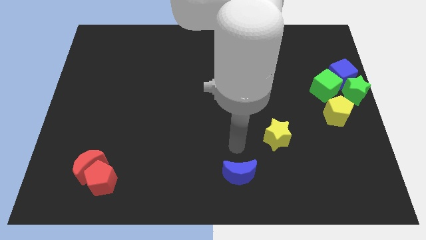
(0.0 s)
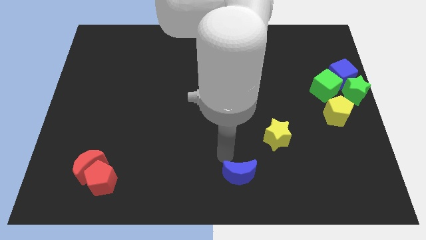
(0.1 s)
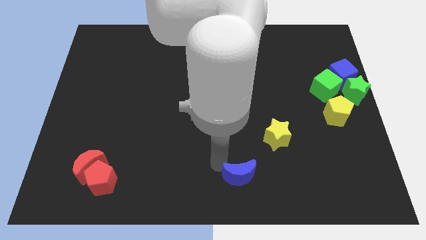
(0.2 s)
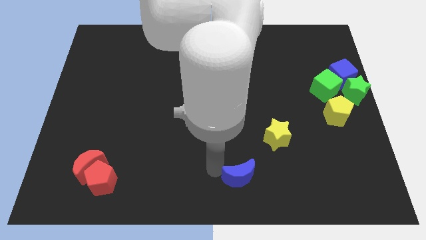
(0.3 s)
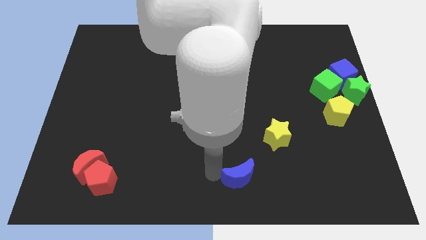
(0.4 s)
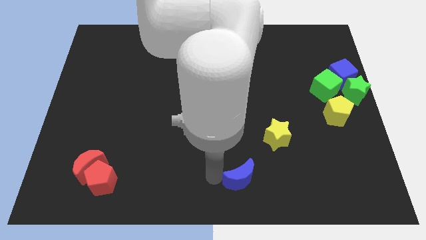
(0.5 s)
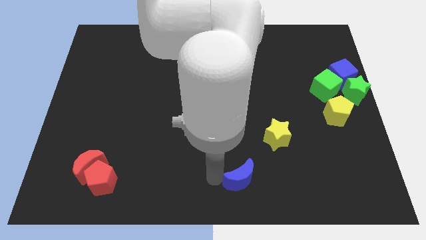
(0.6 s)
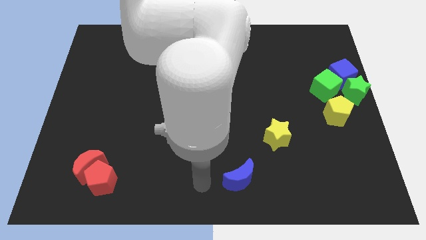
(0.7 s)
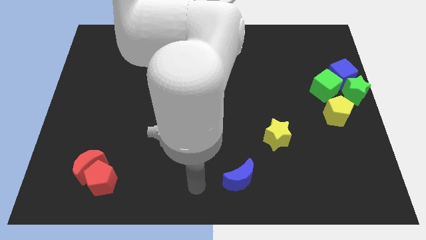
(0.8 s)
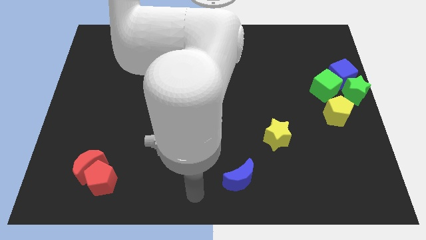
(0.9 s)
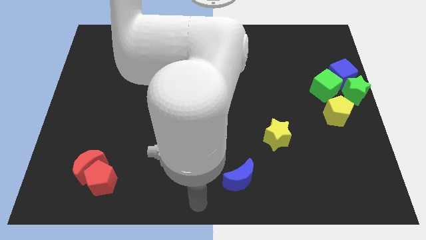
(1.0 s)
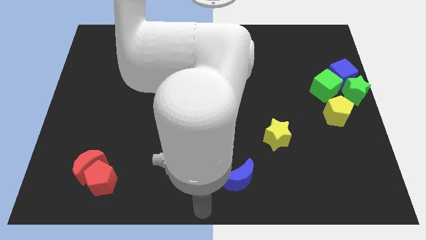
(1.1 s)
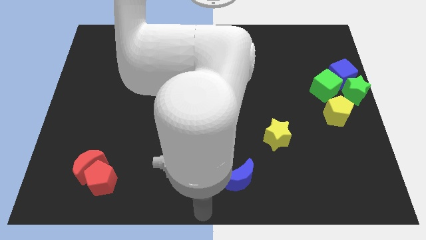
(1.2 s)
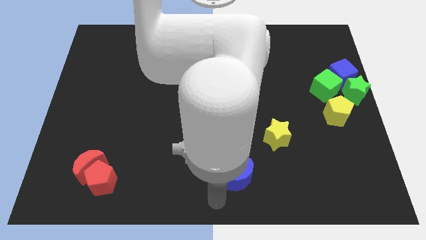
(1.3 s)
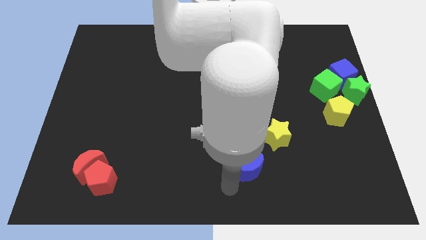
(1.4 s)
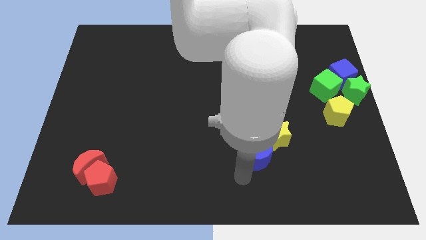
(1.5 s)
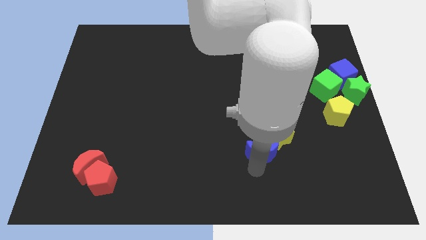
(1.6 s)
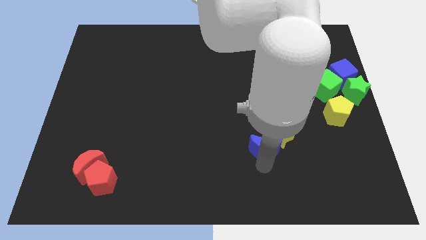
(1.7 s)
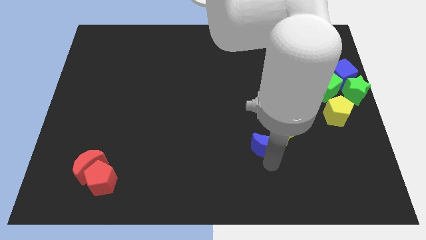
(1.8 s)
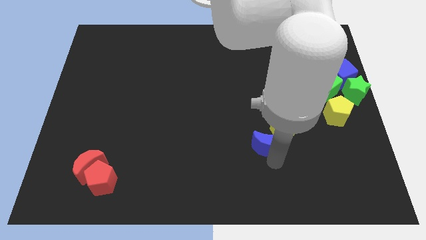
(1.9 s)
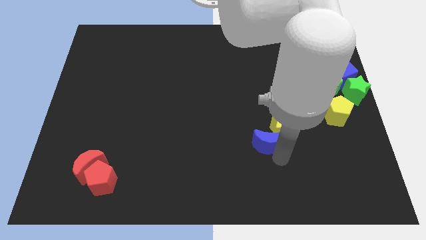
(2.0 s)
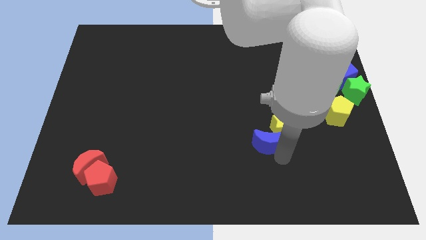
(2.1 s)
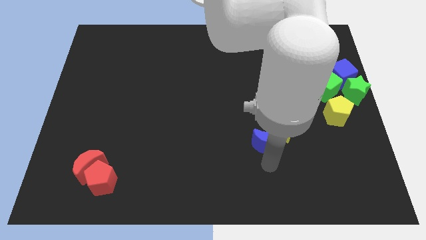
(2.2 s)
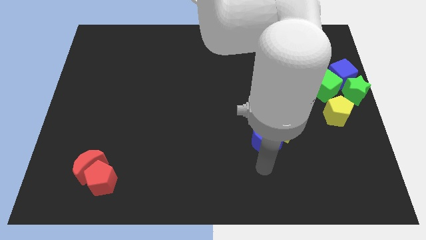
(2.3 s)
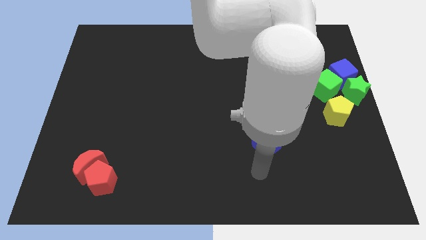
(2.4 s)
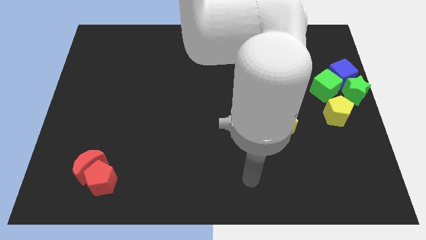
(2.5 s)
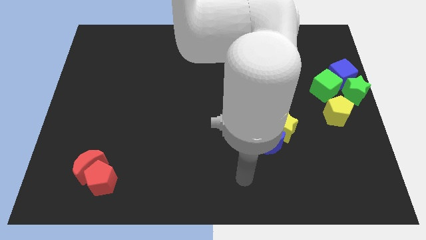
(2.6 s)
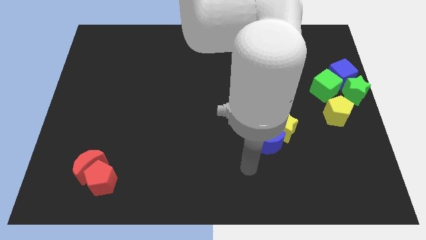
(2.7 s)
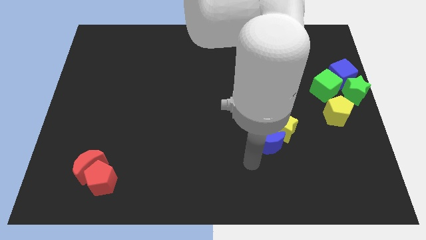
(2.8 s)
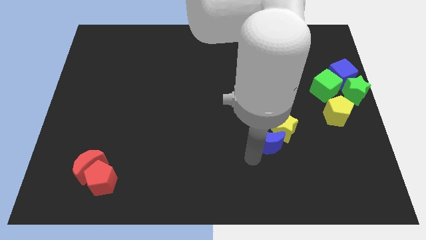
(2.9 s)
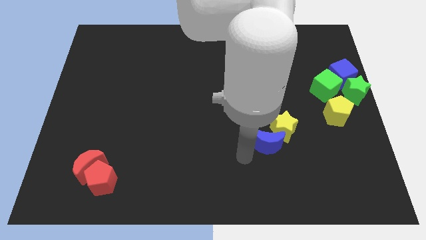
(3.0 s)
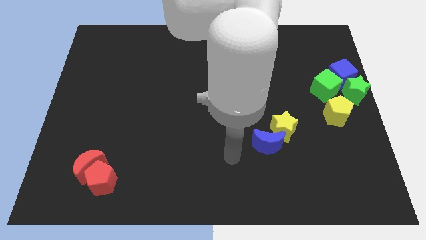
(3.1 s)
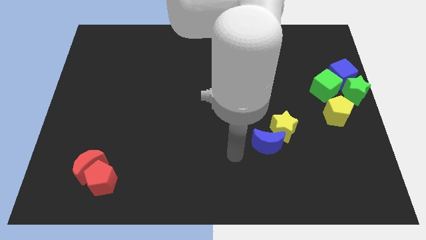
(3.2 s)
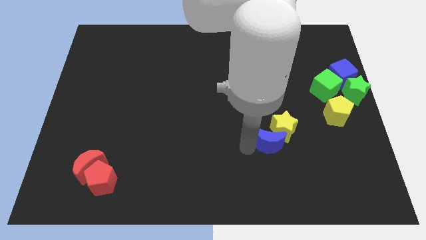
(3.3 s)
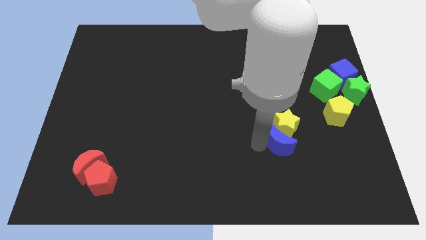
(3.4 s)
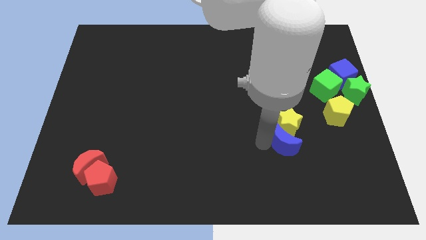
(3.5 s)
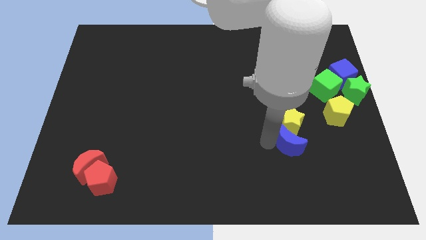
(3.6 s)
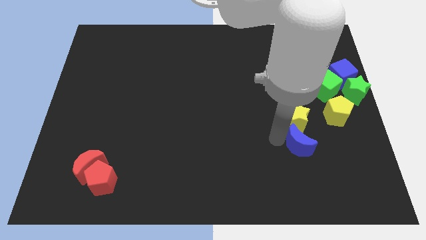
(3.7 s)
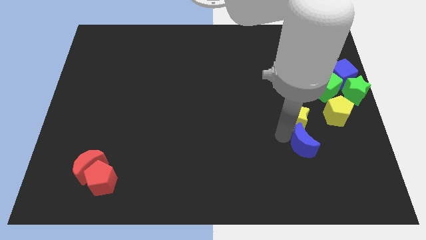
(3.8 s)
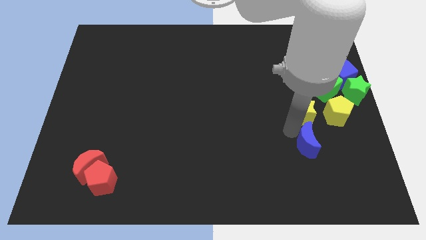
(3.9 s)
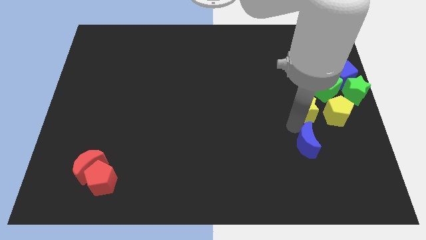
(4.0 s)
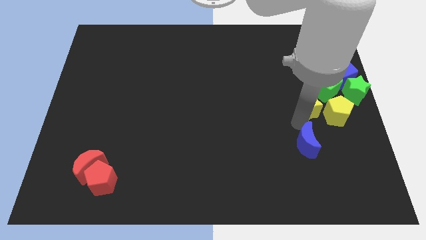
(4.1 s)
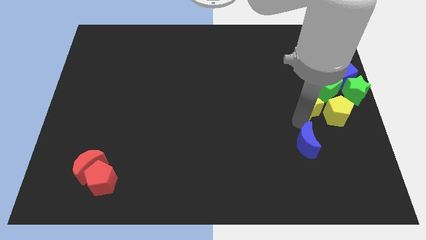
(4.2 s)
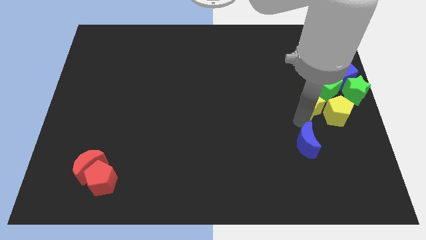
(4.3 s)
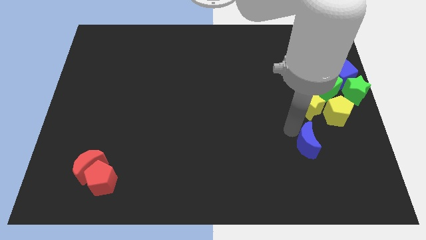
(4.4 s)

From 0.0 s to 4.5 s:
place the yellow star beside the yellow pentagon

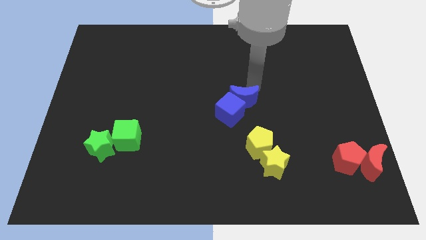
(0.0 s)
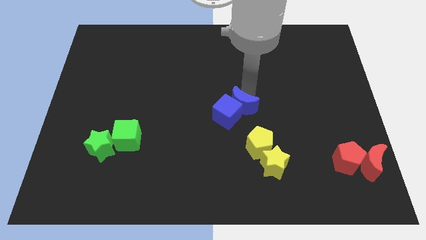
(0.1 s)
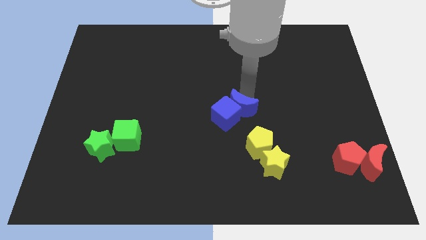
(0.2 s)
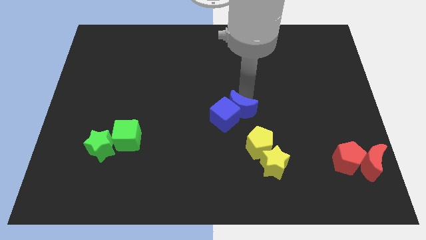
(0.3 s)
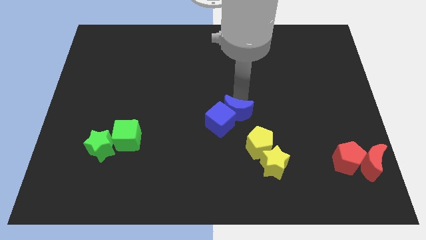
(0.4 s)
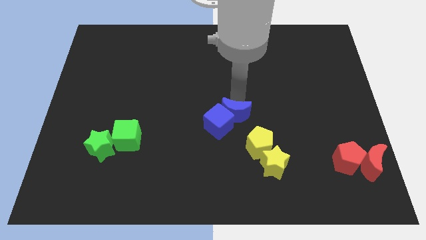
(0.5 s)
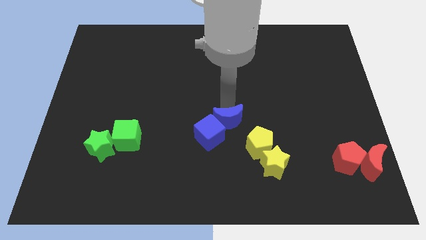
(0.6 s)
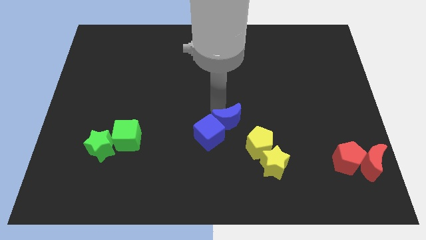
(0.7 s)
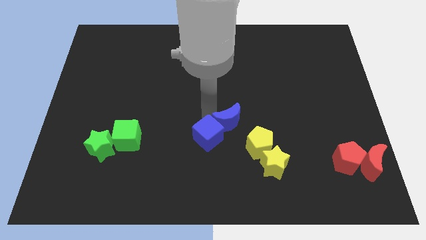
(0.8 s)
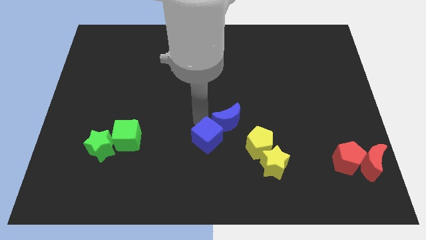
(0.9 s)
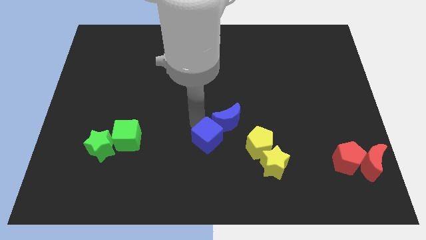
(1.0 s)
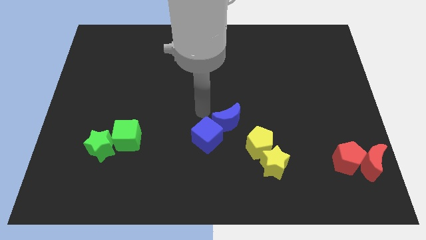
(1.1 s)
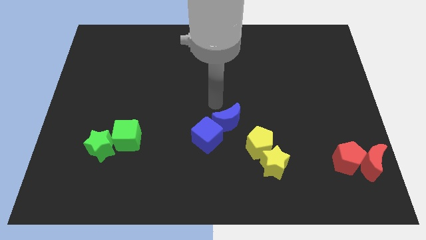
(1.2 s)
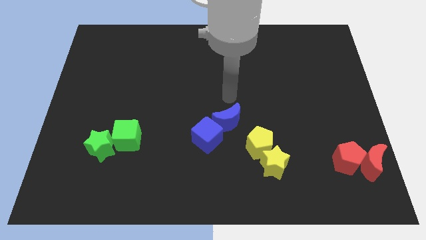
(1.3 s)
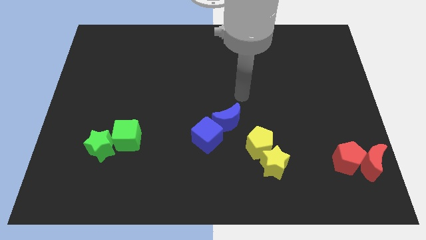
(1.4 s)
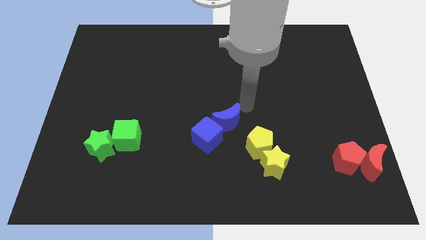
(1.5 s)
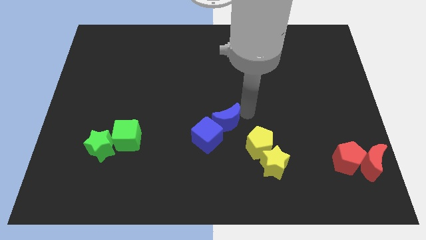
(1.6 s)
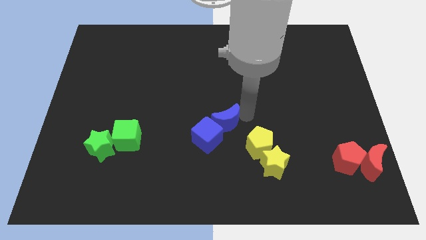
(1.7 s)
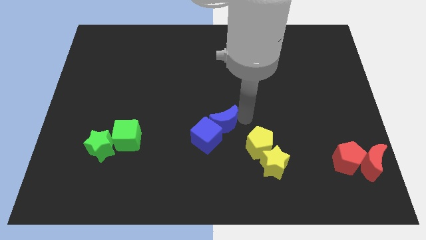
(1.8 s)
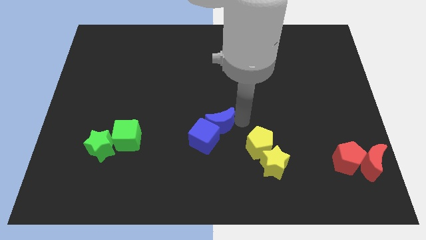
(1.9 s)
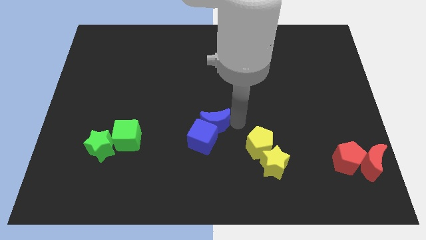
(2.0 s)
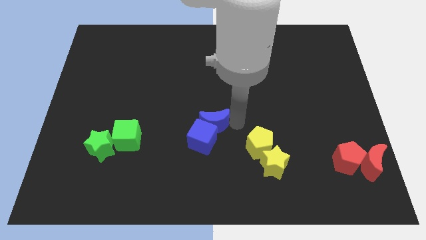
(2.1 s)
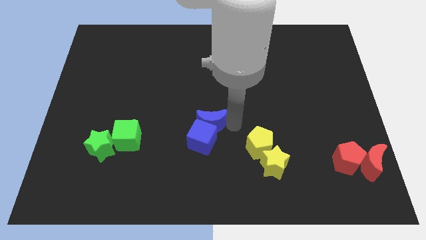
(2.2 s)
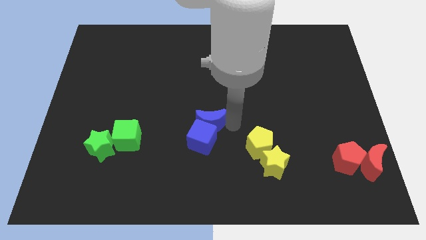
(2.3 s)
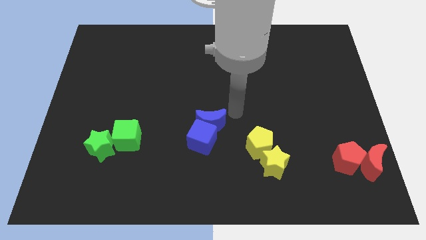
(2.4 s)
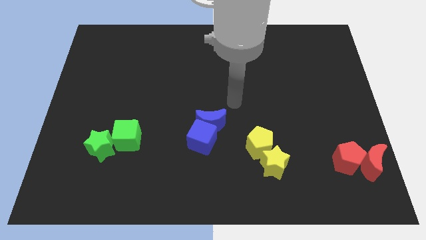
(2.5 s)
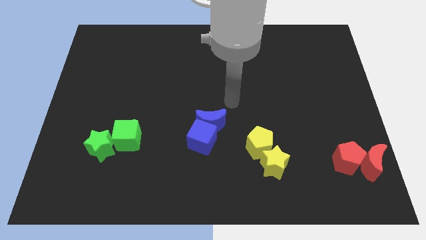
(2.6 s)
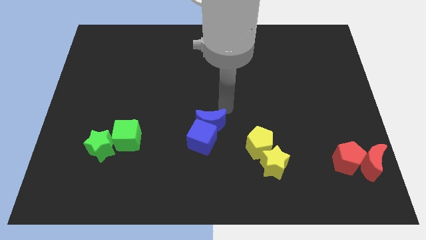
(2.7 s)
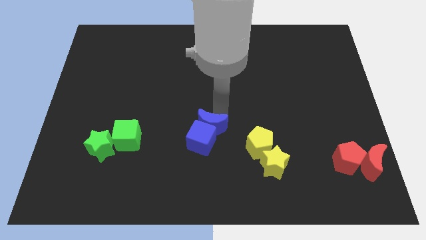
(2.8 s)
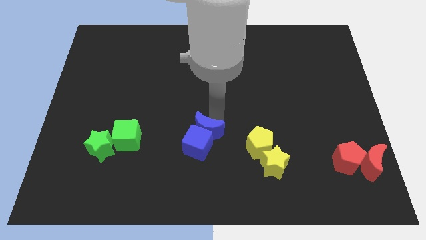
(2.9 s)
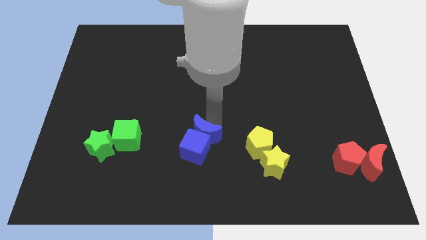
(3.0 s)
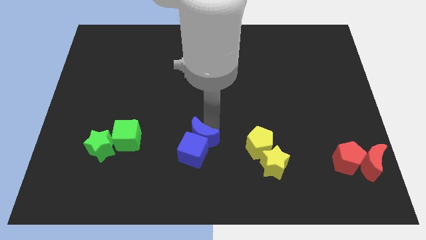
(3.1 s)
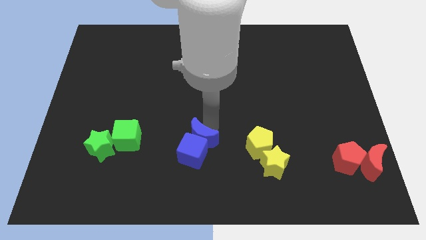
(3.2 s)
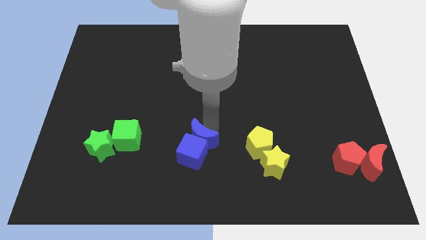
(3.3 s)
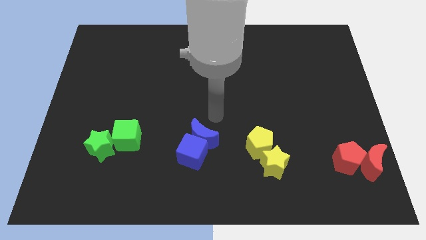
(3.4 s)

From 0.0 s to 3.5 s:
push the blue crescent and blue cube towards the bottom of the board

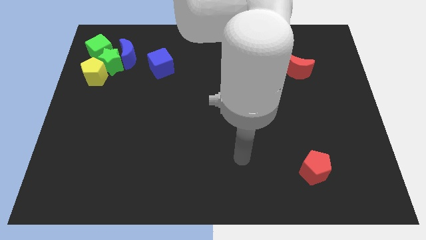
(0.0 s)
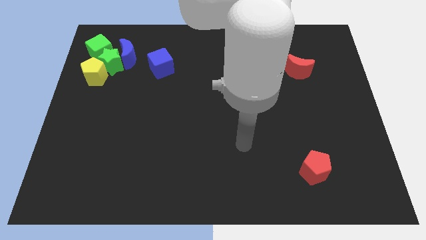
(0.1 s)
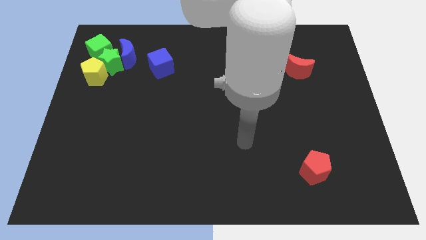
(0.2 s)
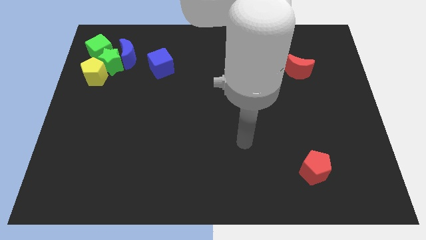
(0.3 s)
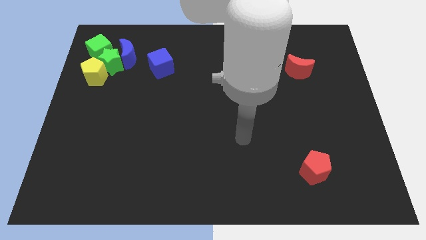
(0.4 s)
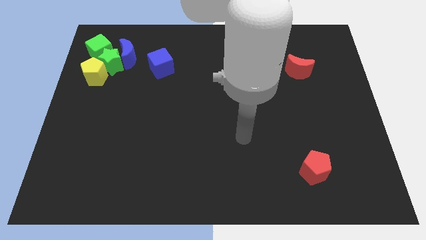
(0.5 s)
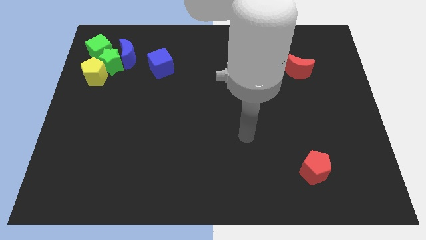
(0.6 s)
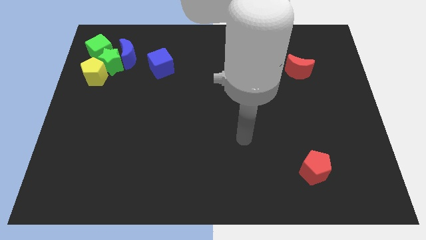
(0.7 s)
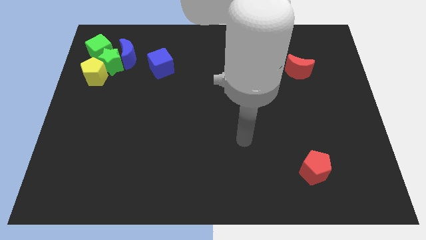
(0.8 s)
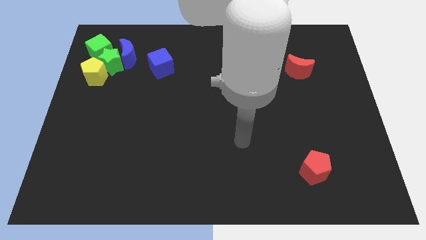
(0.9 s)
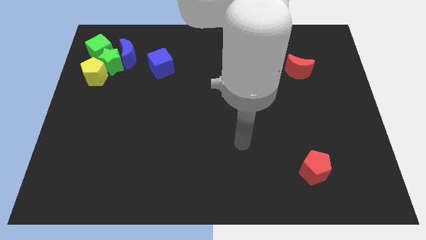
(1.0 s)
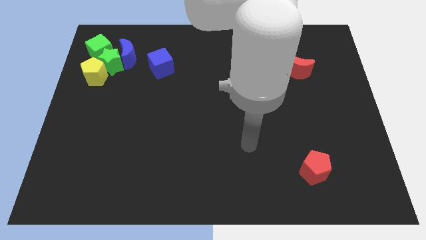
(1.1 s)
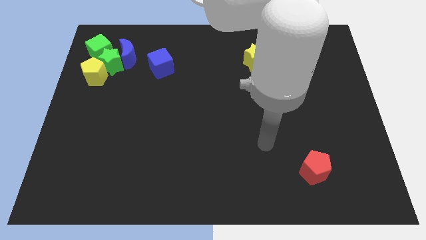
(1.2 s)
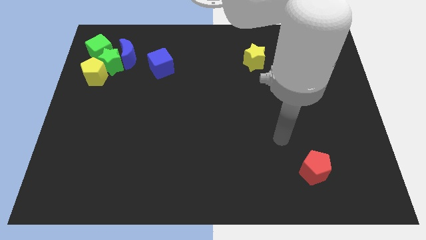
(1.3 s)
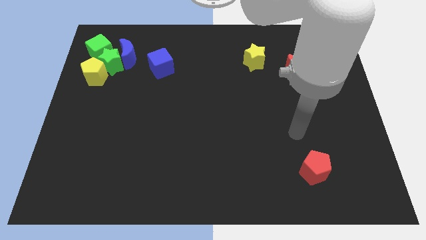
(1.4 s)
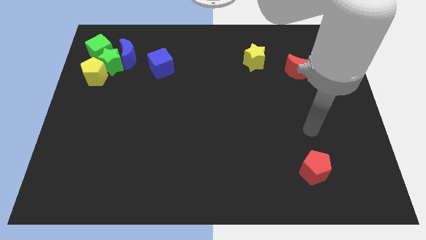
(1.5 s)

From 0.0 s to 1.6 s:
move your arm above the red pentagon
